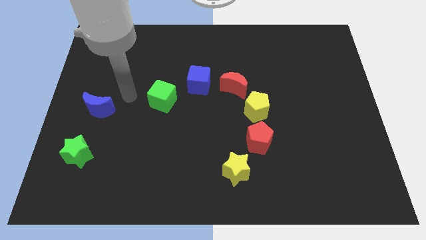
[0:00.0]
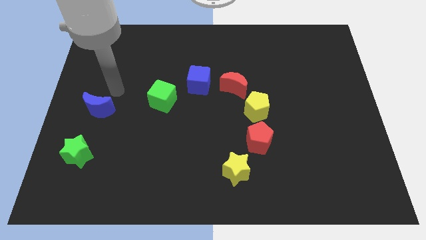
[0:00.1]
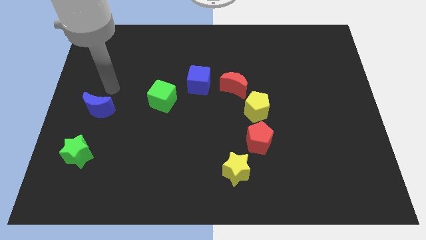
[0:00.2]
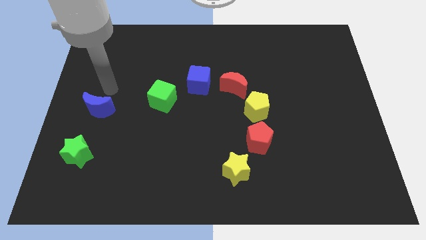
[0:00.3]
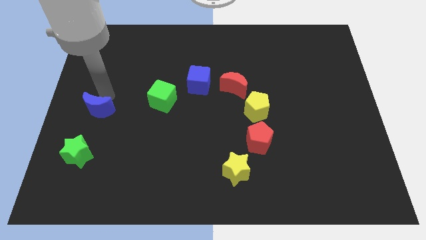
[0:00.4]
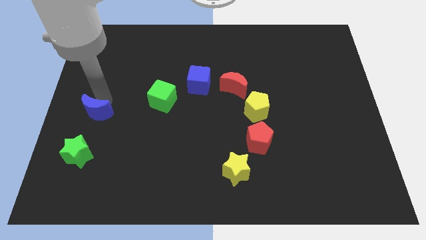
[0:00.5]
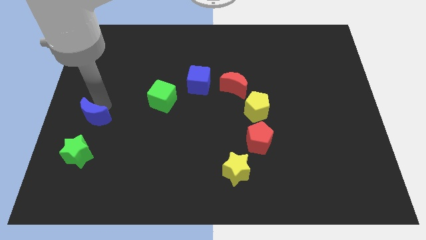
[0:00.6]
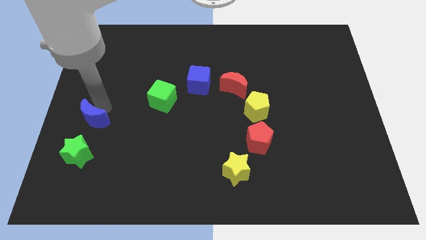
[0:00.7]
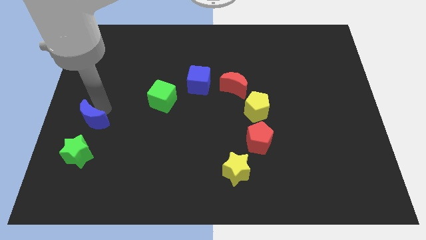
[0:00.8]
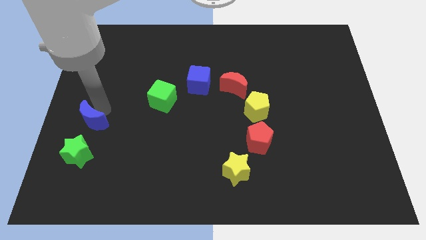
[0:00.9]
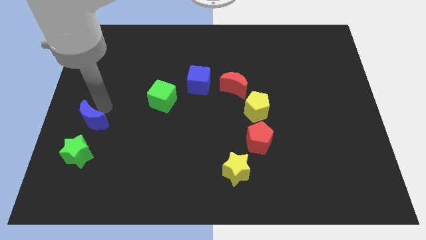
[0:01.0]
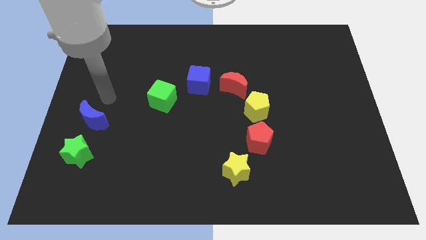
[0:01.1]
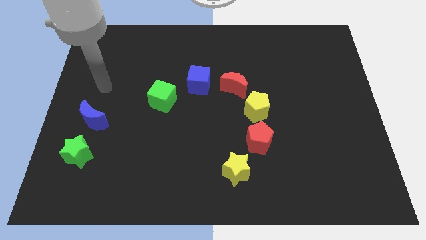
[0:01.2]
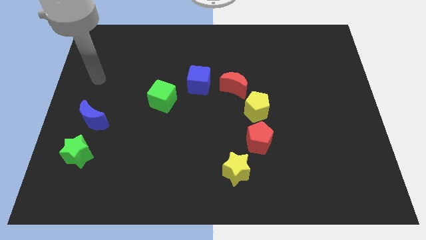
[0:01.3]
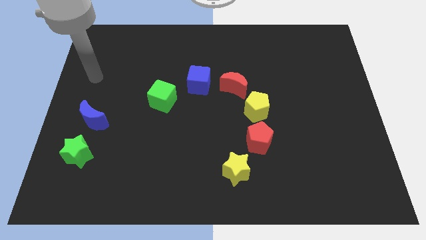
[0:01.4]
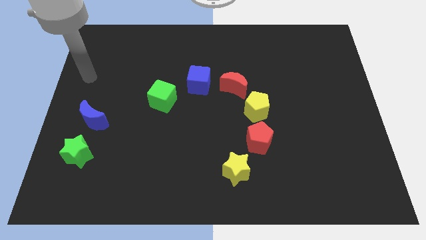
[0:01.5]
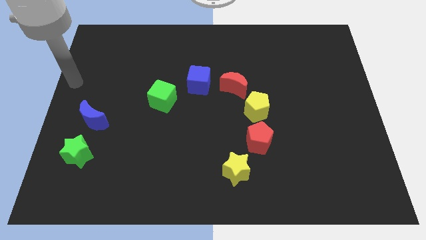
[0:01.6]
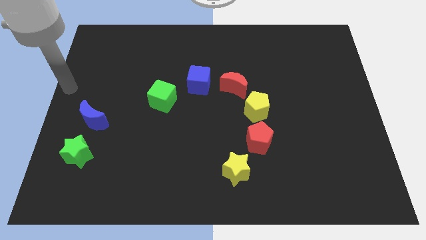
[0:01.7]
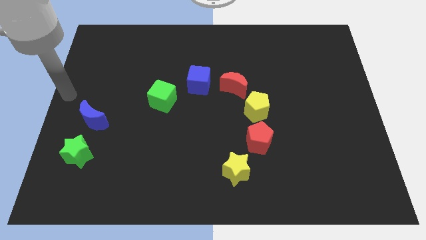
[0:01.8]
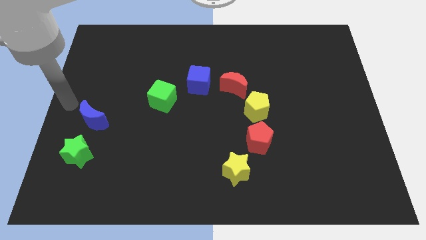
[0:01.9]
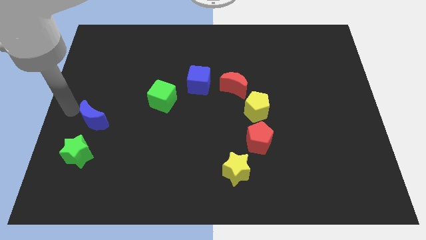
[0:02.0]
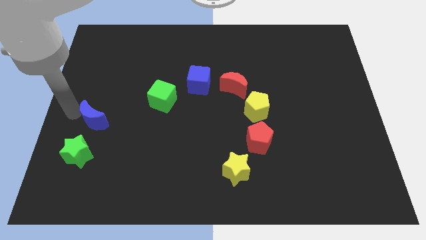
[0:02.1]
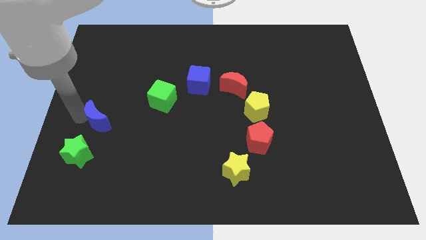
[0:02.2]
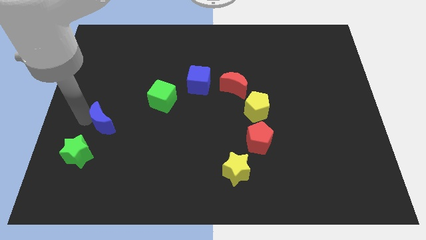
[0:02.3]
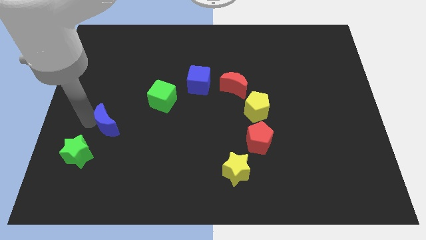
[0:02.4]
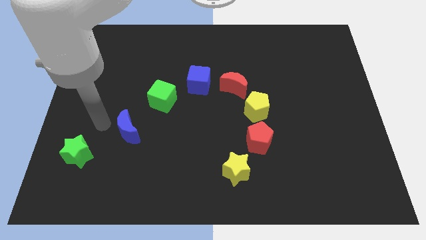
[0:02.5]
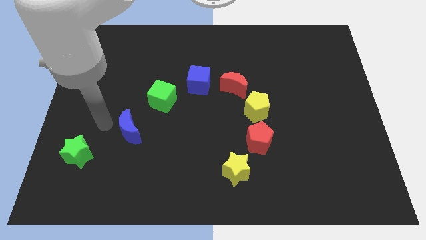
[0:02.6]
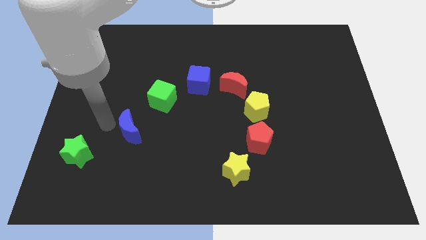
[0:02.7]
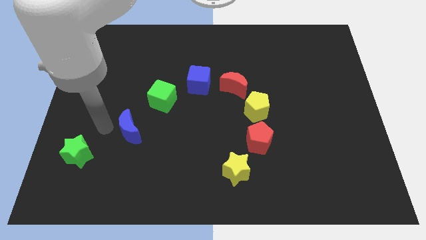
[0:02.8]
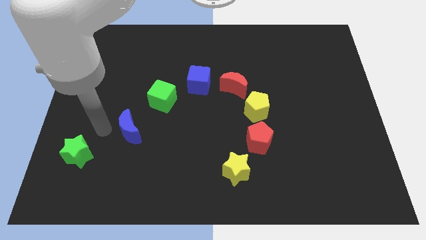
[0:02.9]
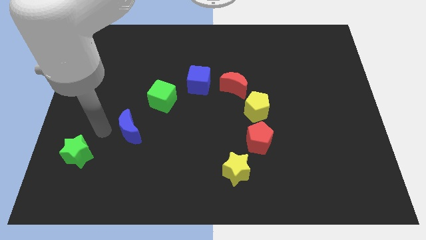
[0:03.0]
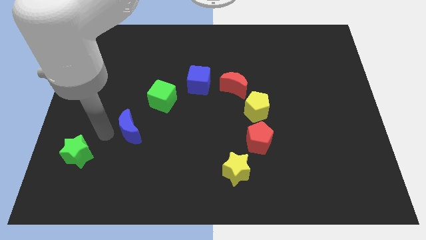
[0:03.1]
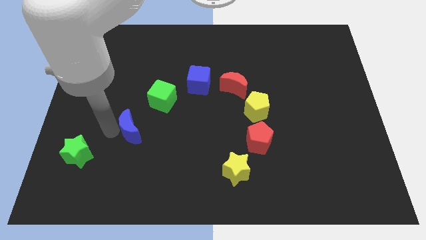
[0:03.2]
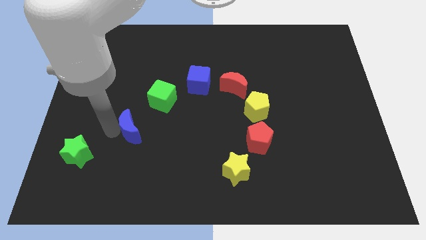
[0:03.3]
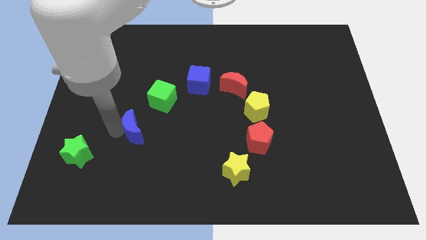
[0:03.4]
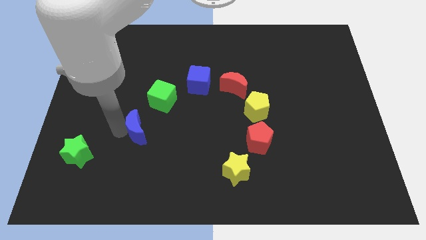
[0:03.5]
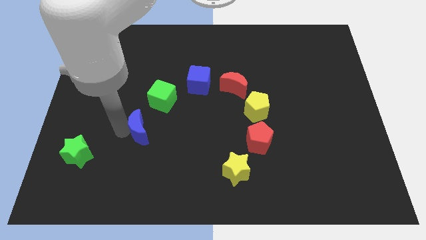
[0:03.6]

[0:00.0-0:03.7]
push the blue crescent to the right

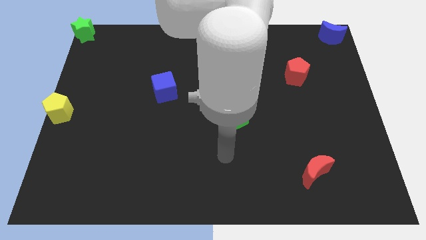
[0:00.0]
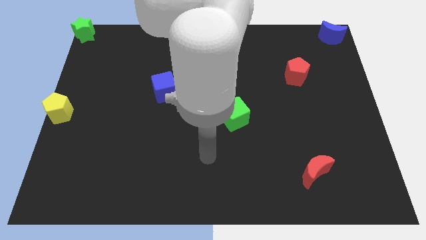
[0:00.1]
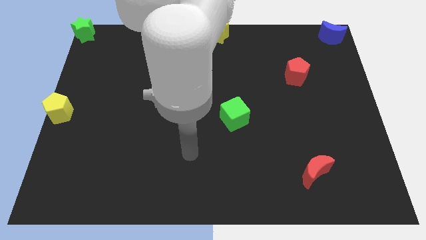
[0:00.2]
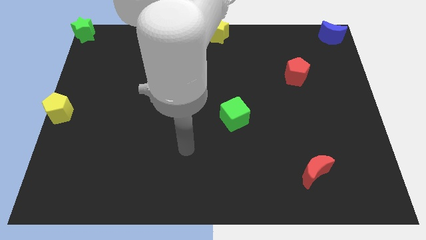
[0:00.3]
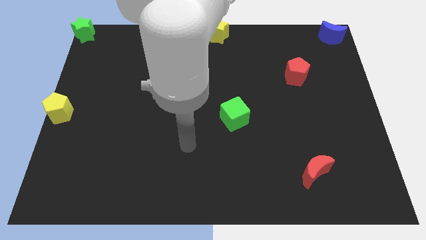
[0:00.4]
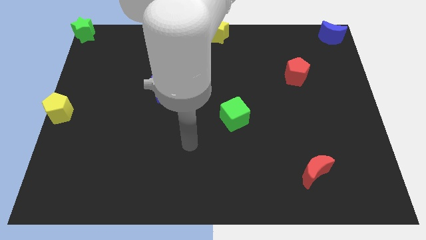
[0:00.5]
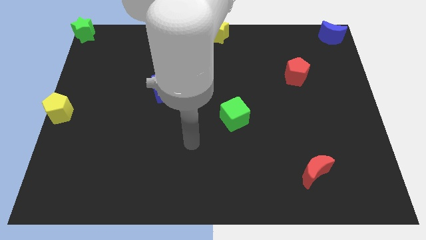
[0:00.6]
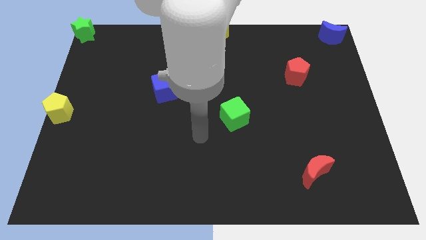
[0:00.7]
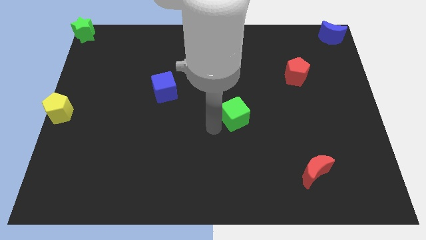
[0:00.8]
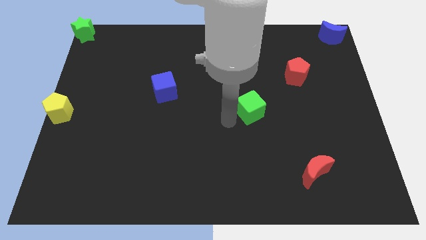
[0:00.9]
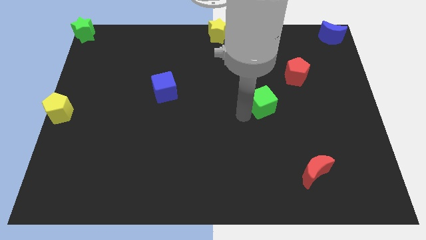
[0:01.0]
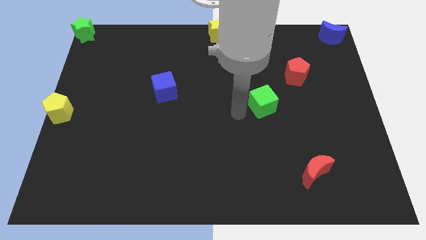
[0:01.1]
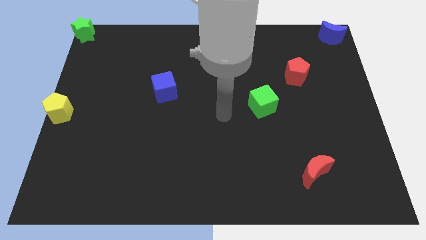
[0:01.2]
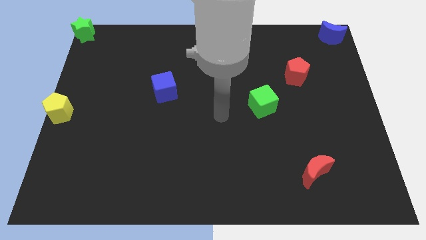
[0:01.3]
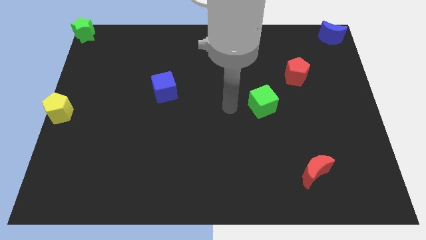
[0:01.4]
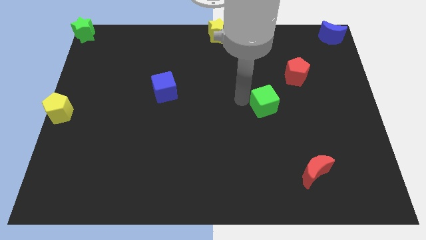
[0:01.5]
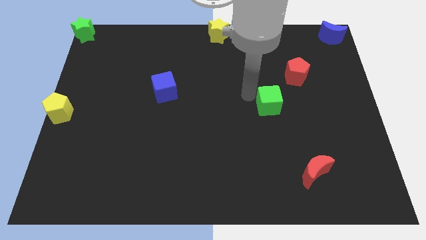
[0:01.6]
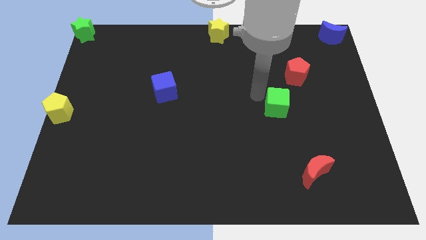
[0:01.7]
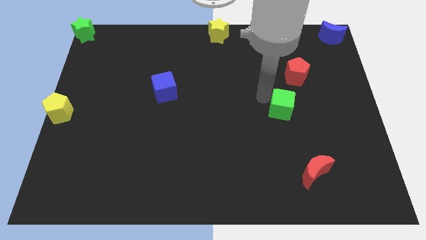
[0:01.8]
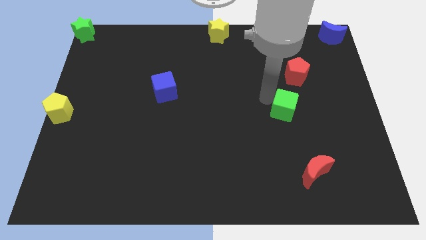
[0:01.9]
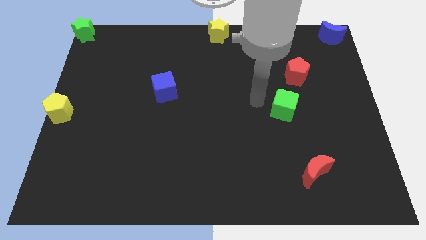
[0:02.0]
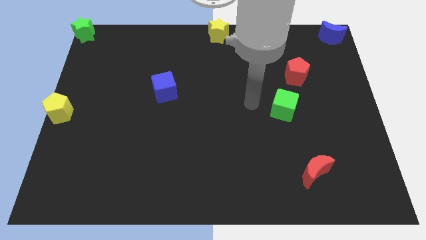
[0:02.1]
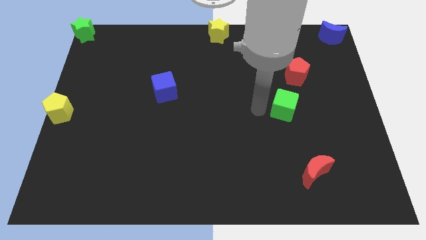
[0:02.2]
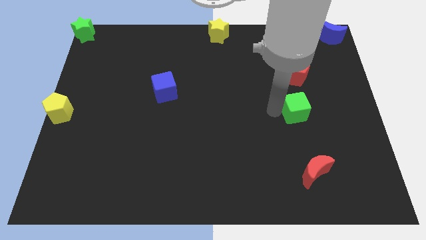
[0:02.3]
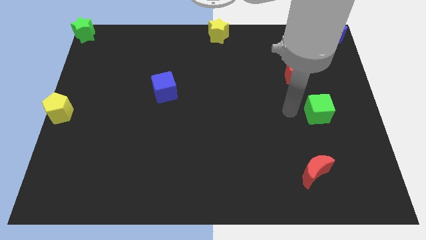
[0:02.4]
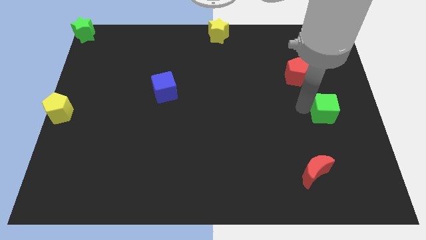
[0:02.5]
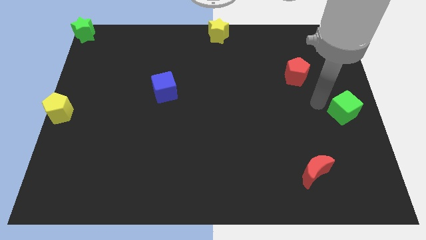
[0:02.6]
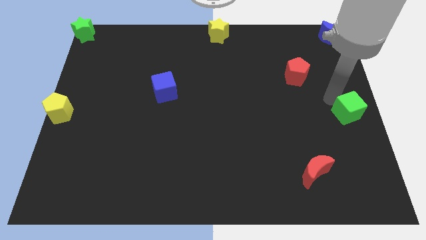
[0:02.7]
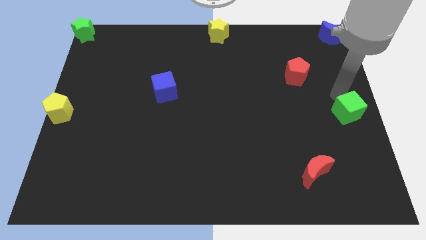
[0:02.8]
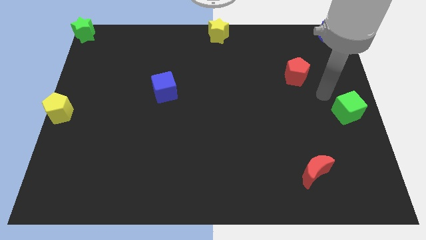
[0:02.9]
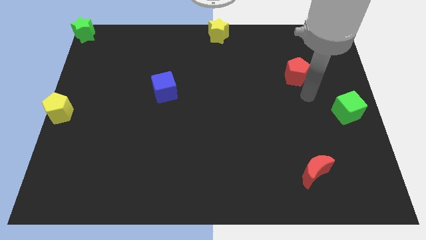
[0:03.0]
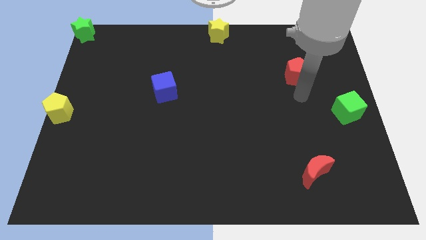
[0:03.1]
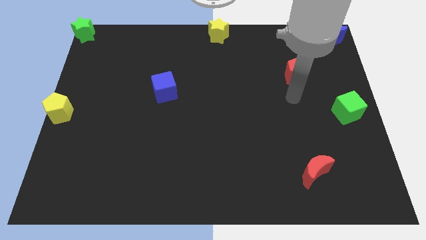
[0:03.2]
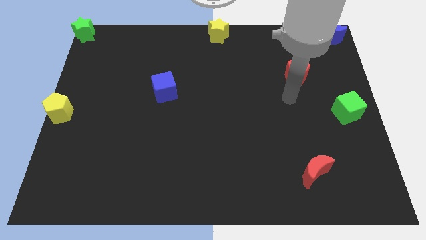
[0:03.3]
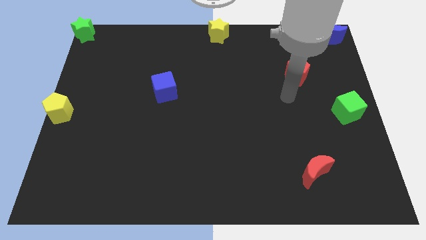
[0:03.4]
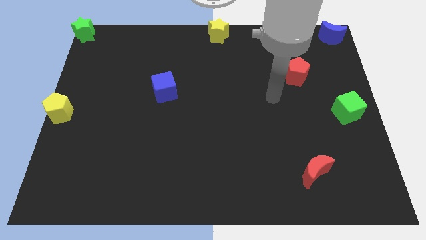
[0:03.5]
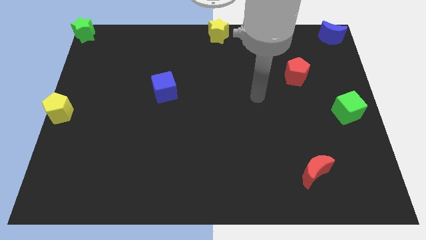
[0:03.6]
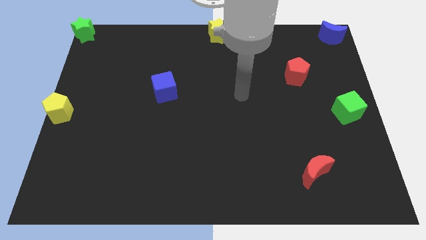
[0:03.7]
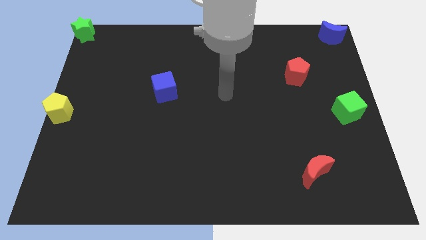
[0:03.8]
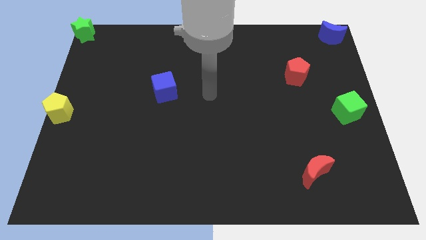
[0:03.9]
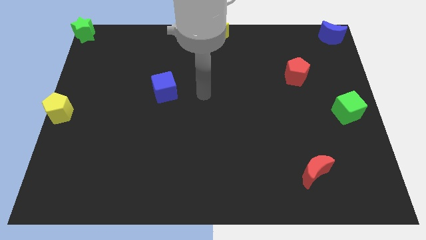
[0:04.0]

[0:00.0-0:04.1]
slide green cube to the center right

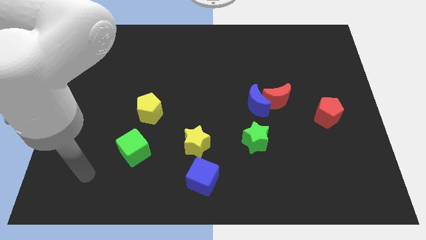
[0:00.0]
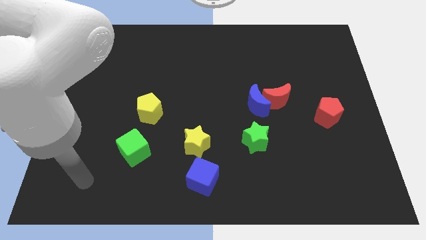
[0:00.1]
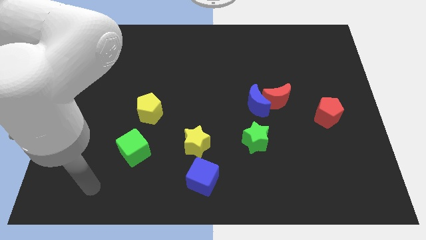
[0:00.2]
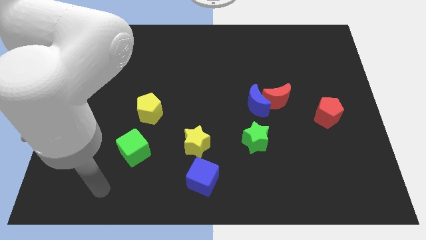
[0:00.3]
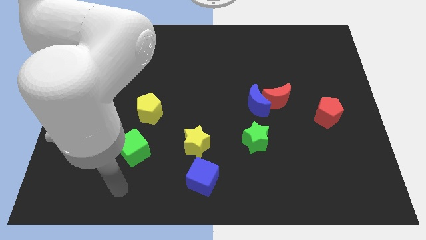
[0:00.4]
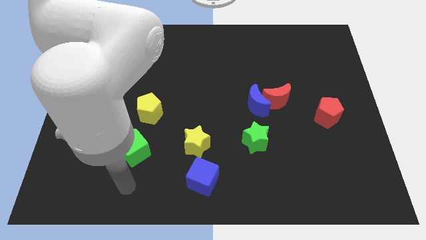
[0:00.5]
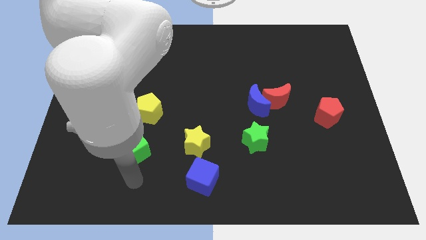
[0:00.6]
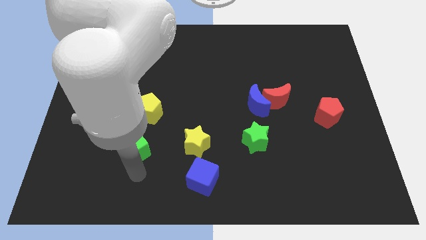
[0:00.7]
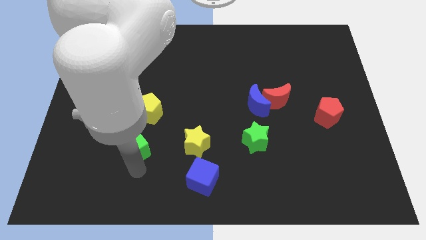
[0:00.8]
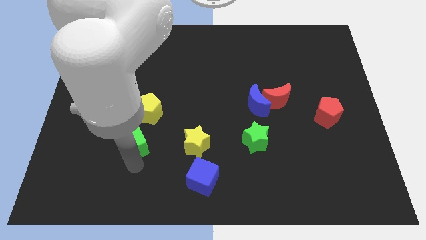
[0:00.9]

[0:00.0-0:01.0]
slightly push the green cube towards the top side of the board

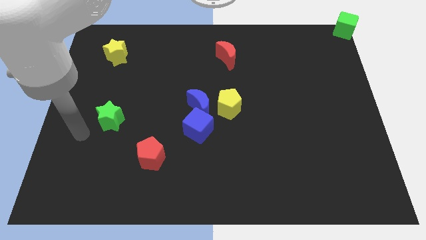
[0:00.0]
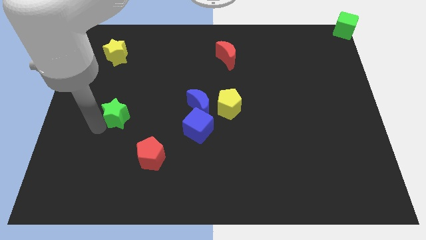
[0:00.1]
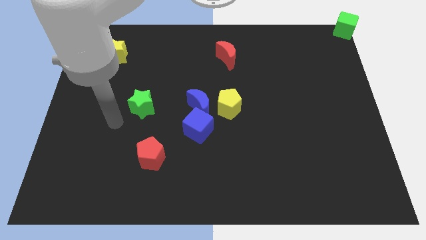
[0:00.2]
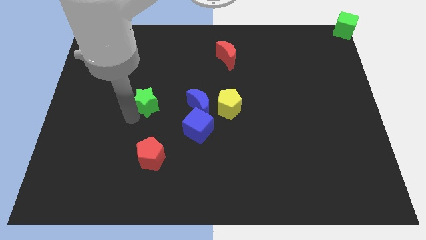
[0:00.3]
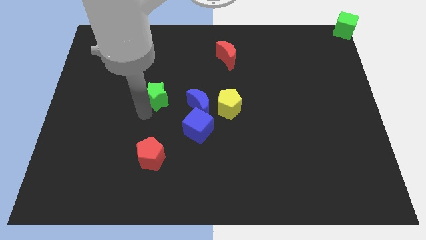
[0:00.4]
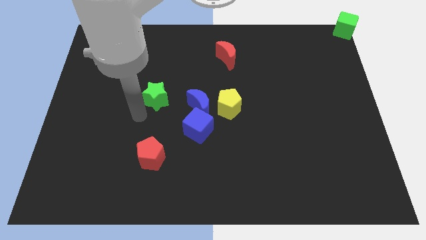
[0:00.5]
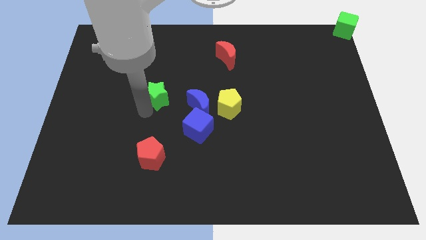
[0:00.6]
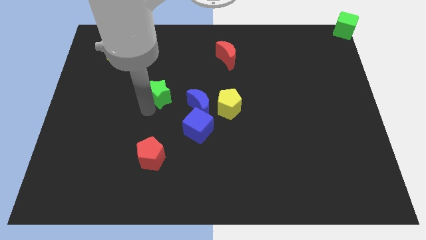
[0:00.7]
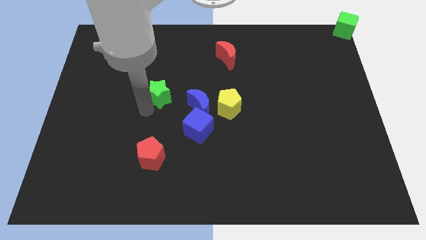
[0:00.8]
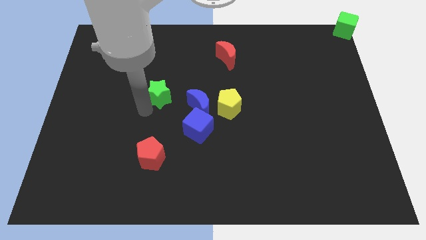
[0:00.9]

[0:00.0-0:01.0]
move the green star to the top right of the board
